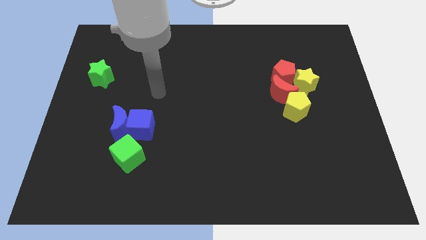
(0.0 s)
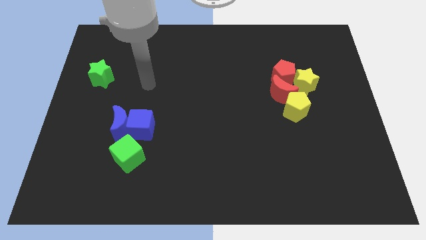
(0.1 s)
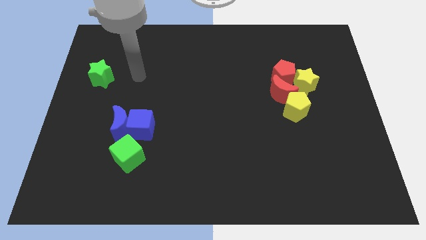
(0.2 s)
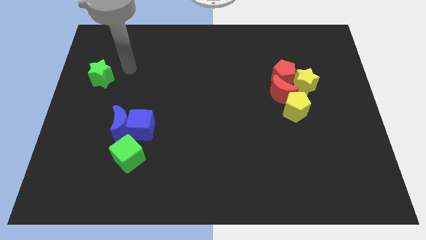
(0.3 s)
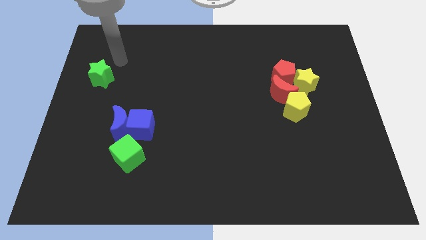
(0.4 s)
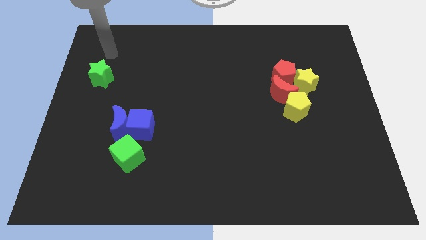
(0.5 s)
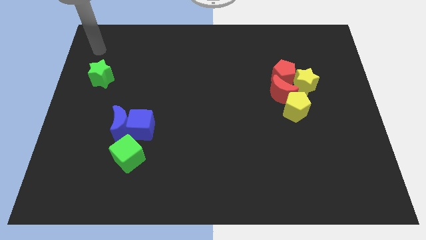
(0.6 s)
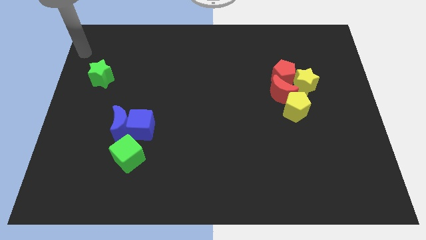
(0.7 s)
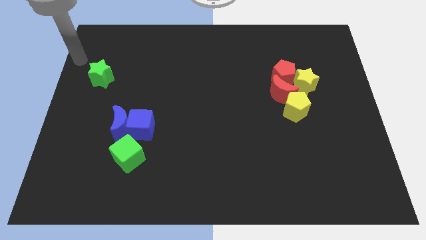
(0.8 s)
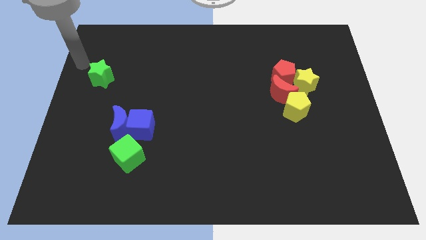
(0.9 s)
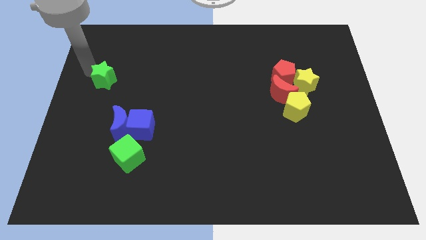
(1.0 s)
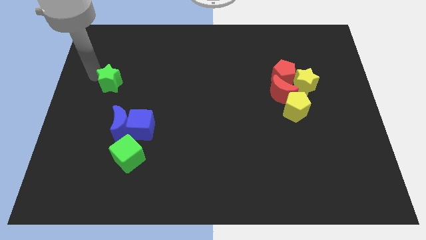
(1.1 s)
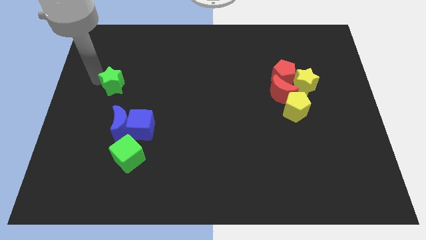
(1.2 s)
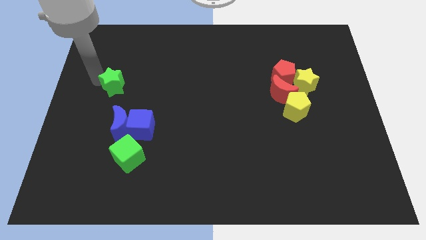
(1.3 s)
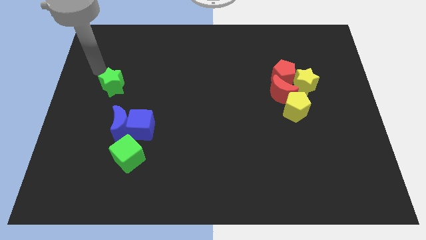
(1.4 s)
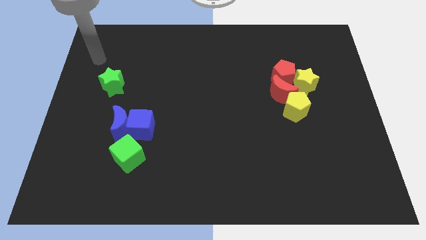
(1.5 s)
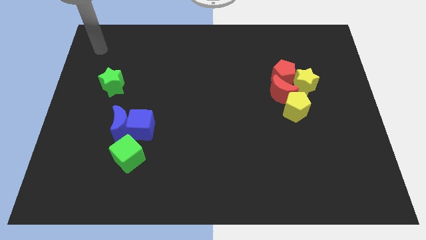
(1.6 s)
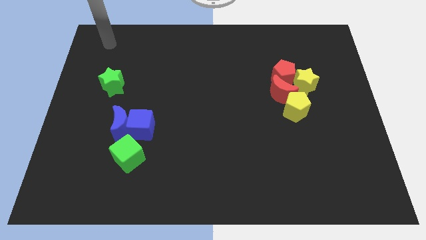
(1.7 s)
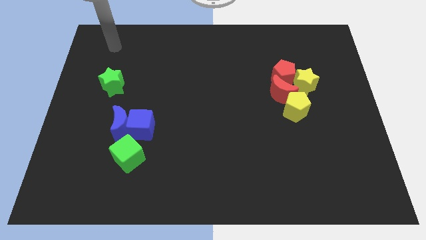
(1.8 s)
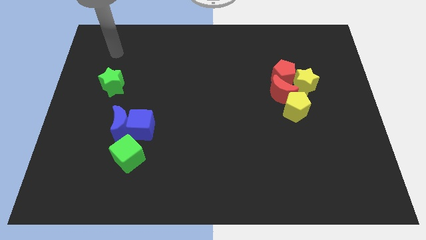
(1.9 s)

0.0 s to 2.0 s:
move the green star towards the blue moon

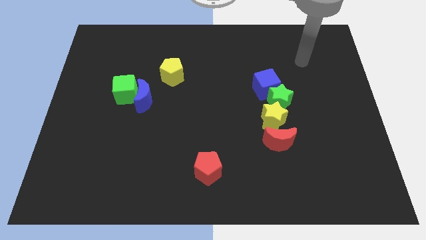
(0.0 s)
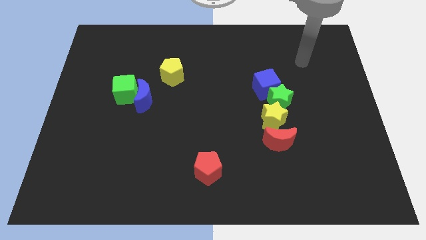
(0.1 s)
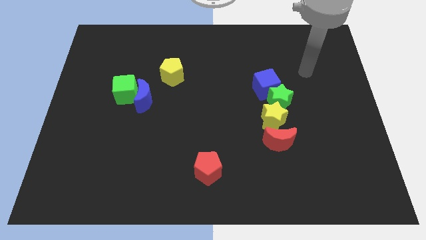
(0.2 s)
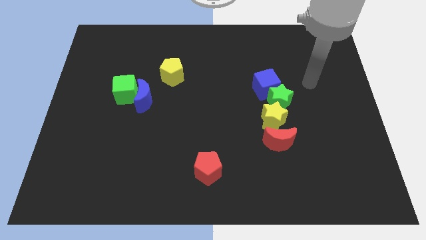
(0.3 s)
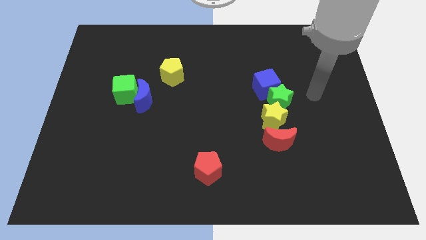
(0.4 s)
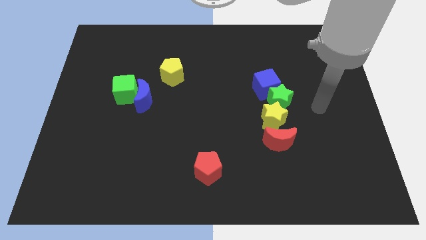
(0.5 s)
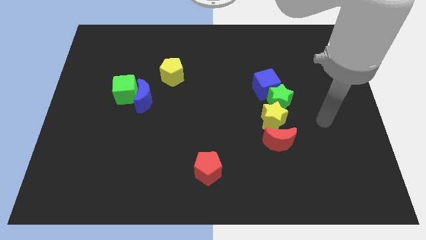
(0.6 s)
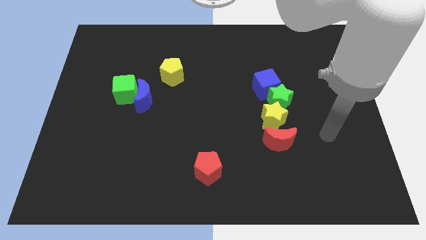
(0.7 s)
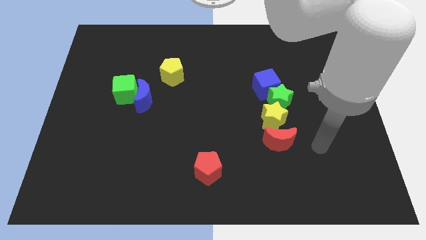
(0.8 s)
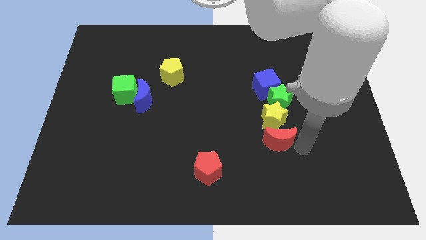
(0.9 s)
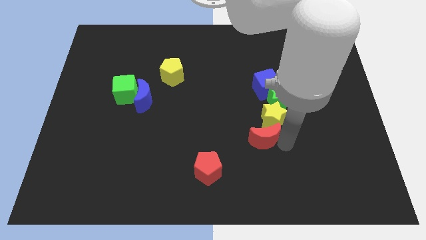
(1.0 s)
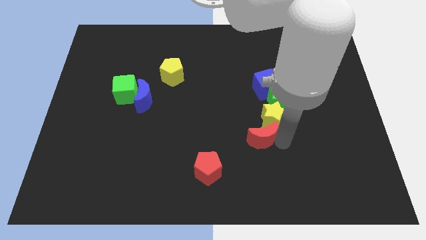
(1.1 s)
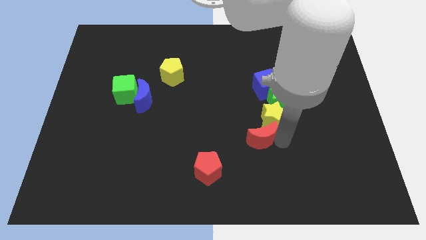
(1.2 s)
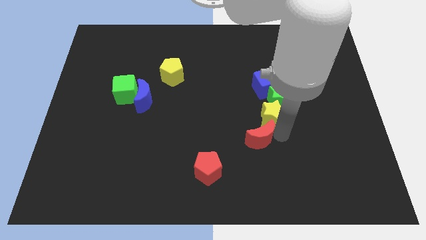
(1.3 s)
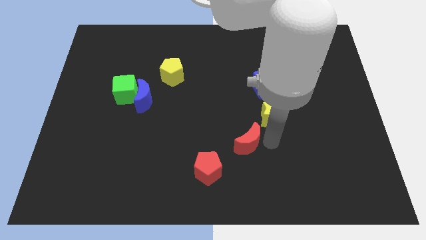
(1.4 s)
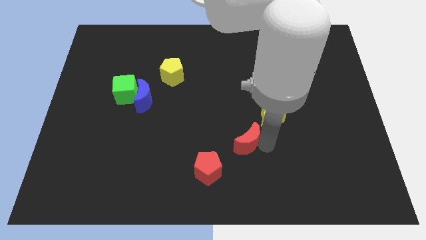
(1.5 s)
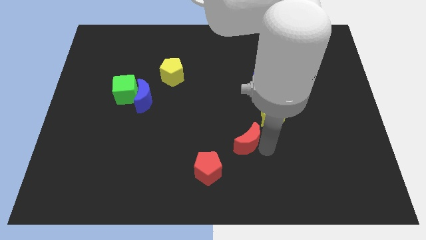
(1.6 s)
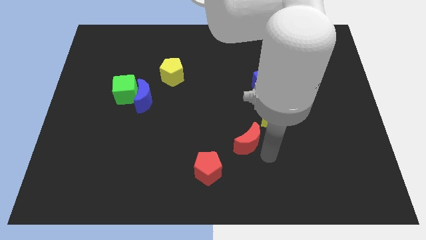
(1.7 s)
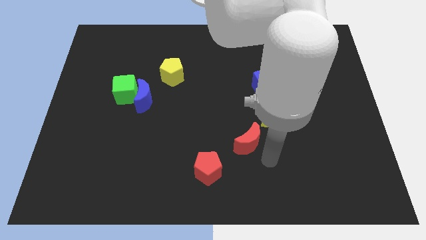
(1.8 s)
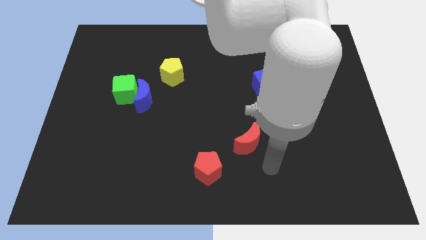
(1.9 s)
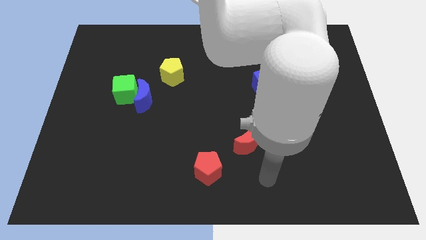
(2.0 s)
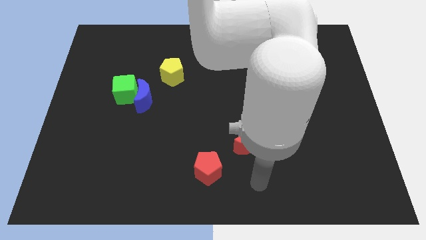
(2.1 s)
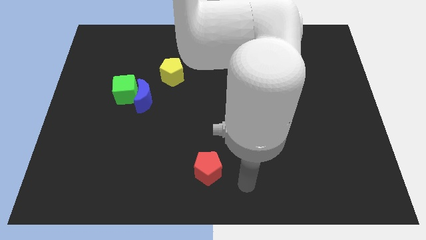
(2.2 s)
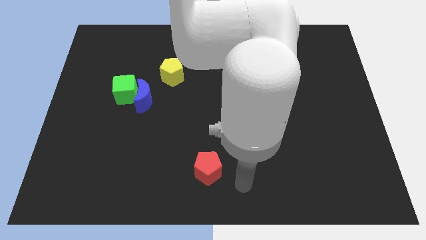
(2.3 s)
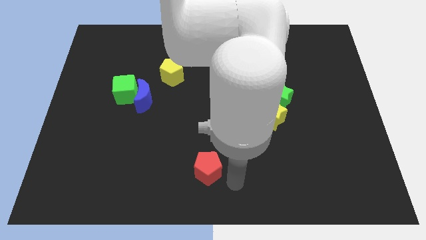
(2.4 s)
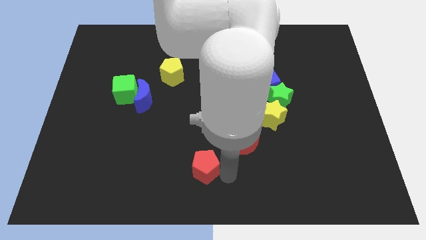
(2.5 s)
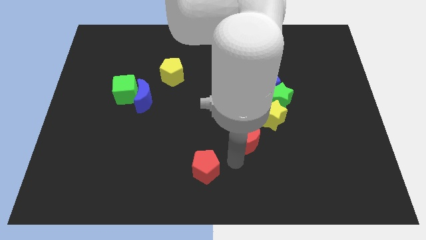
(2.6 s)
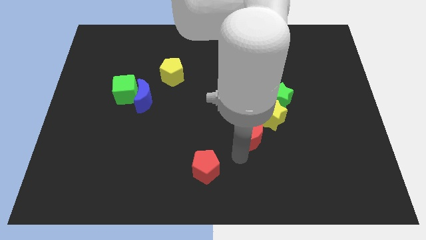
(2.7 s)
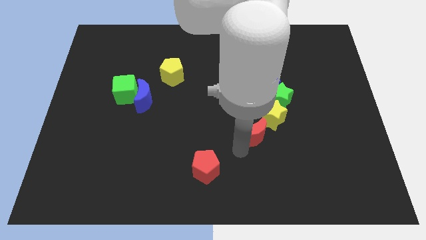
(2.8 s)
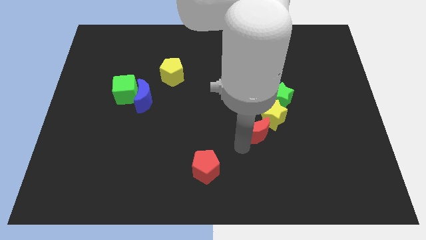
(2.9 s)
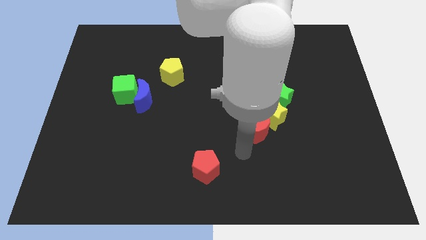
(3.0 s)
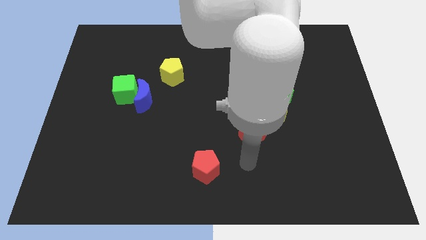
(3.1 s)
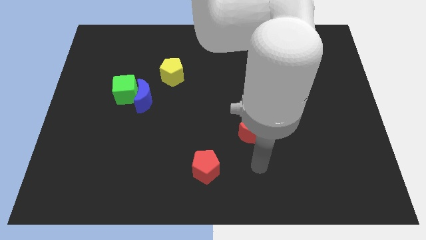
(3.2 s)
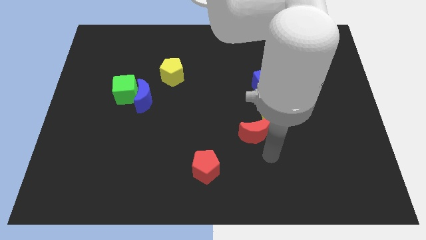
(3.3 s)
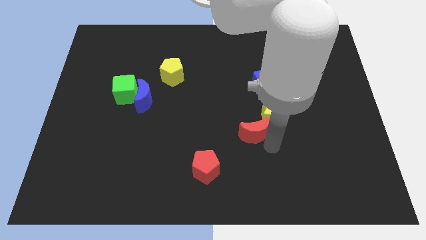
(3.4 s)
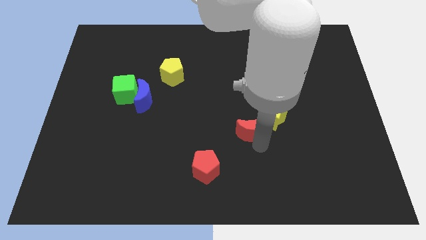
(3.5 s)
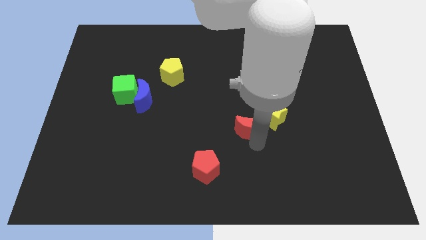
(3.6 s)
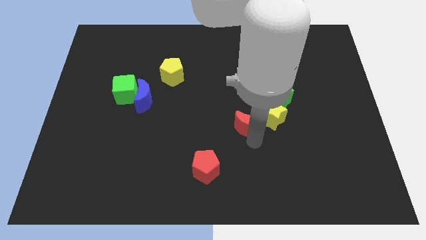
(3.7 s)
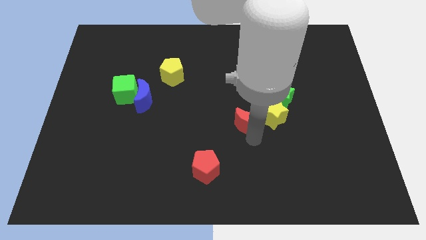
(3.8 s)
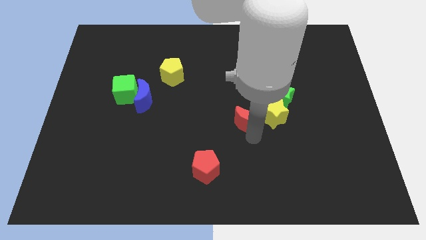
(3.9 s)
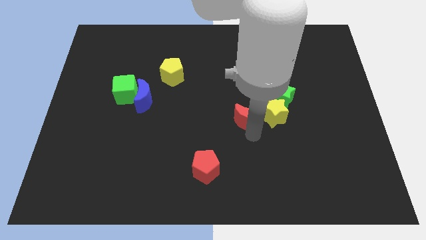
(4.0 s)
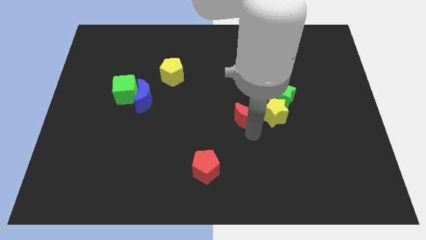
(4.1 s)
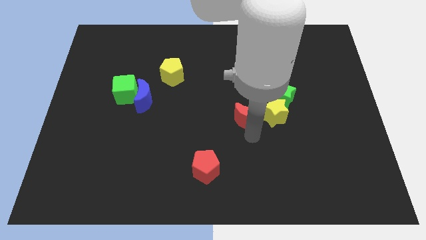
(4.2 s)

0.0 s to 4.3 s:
push the red moon at the left side of the yellow star

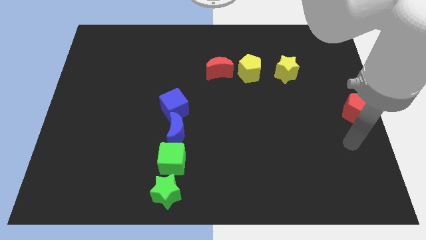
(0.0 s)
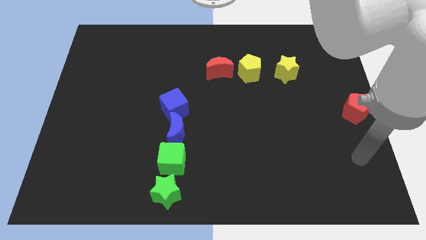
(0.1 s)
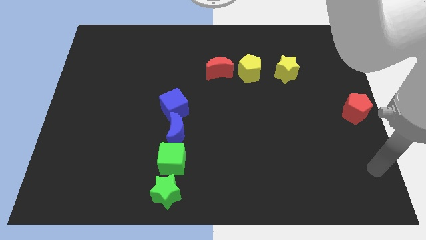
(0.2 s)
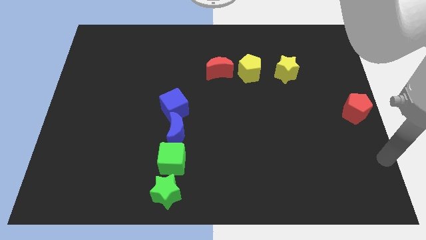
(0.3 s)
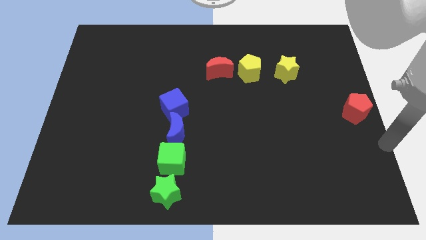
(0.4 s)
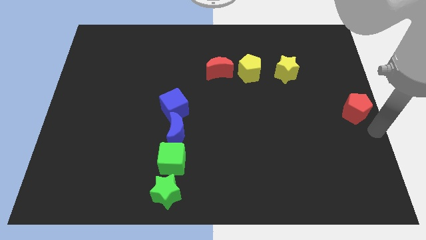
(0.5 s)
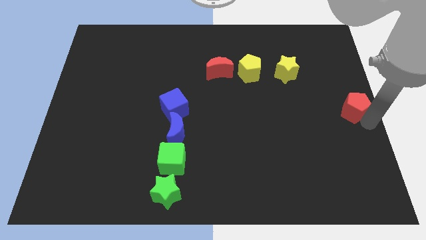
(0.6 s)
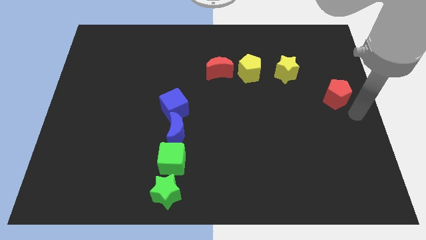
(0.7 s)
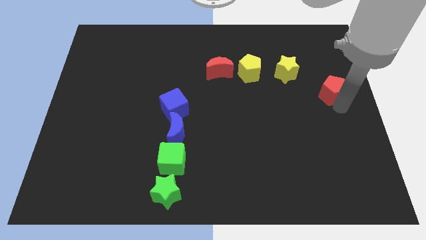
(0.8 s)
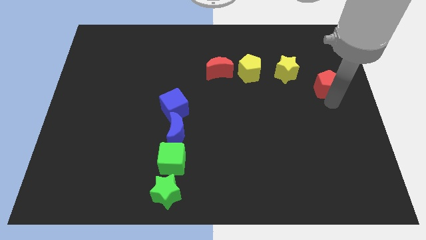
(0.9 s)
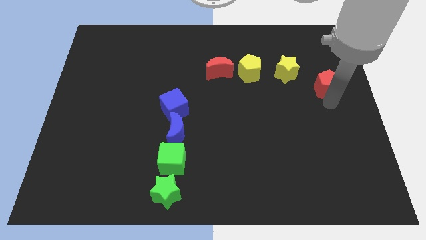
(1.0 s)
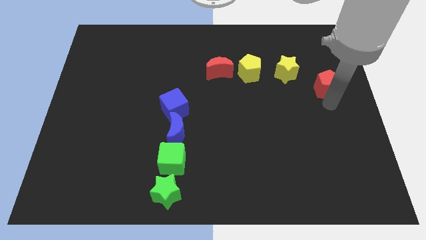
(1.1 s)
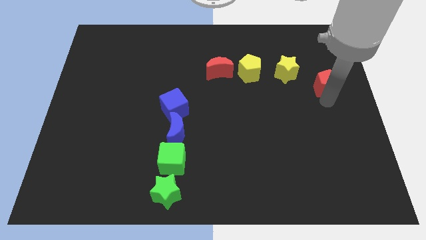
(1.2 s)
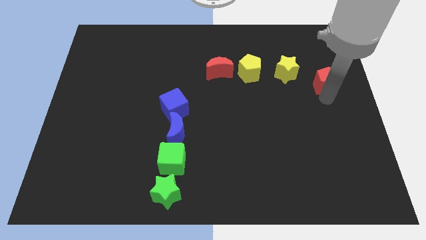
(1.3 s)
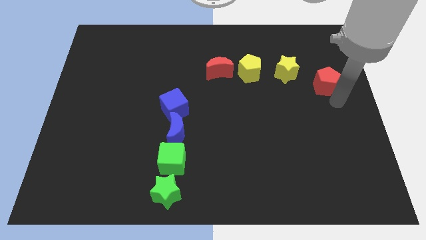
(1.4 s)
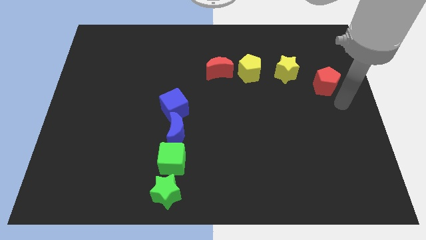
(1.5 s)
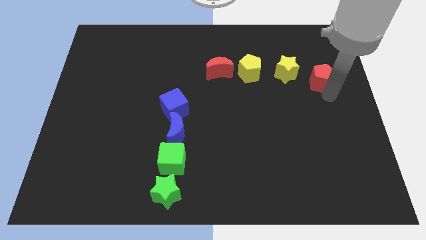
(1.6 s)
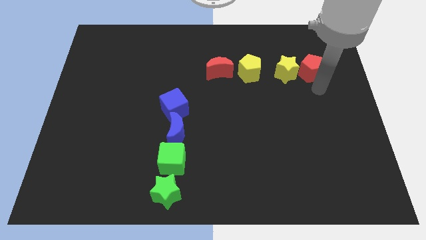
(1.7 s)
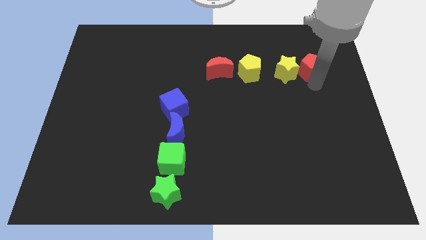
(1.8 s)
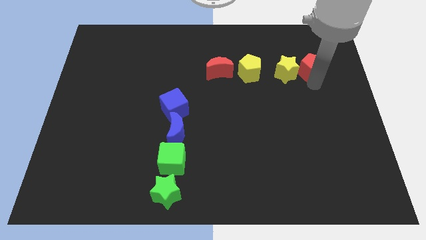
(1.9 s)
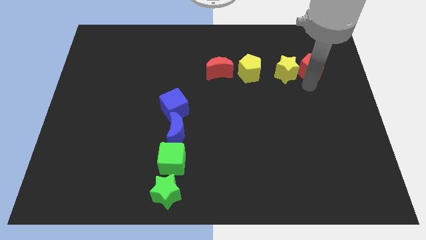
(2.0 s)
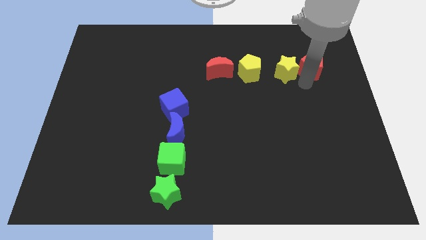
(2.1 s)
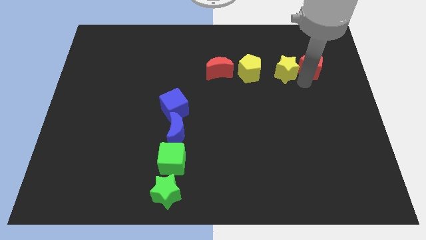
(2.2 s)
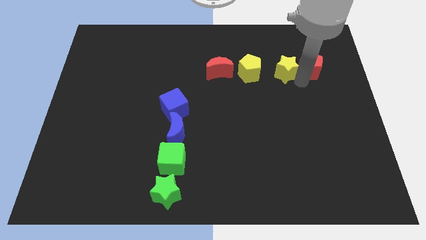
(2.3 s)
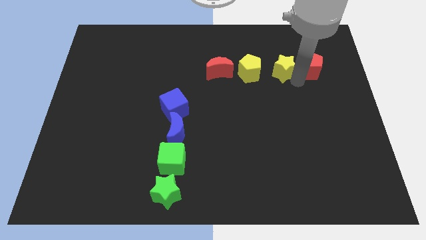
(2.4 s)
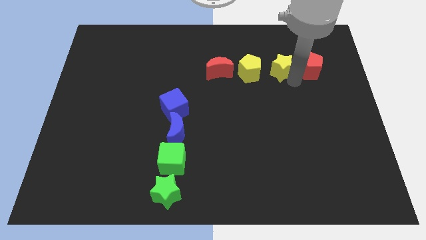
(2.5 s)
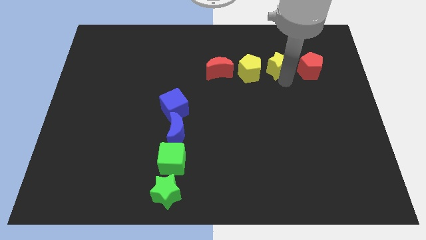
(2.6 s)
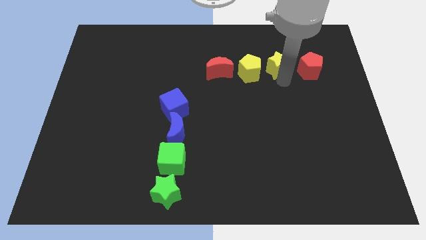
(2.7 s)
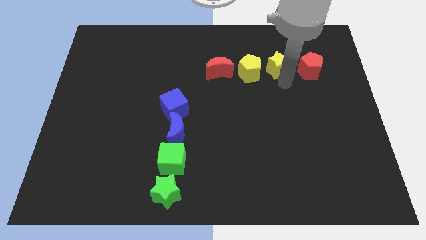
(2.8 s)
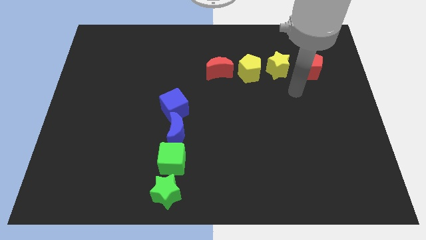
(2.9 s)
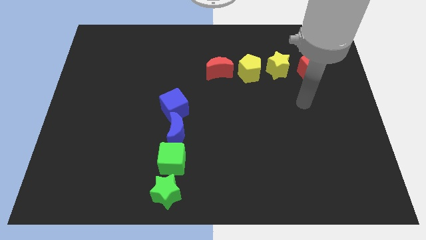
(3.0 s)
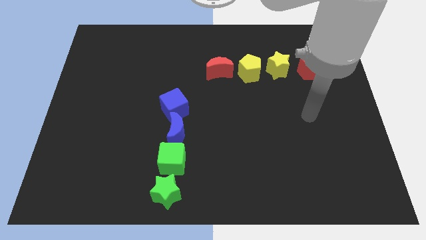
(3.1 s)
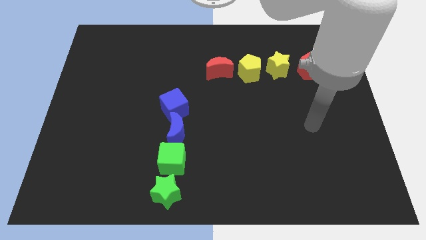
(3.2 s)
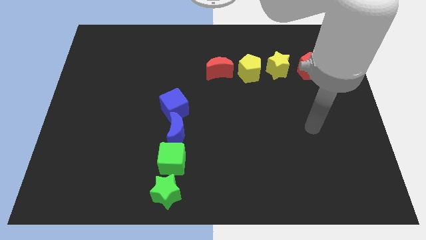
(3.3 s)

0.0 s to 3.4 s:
place the red pentagon and yellow star horizontally to form a line
